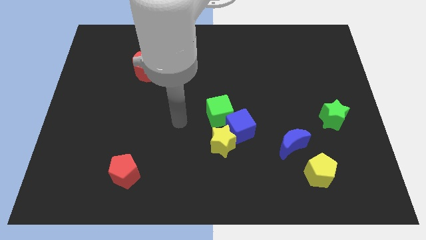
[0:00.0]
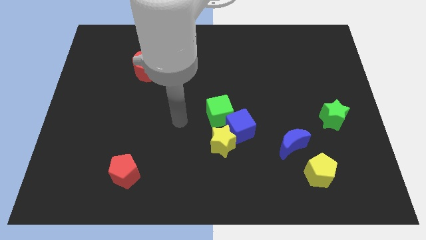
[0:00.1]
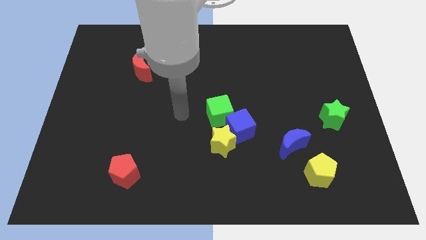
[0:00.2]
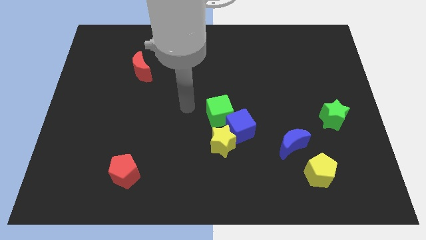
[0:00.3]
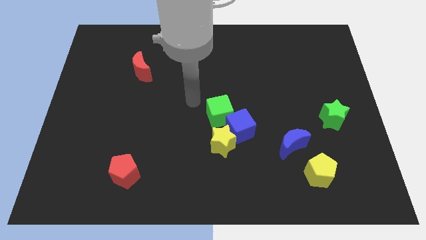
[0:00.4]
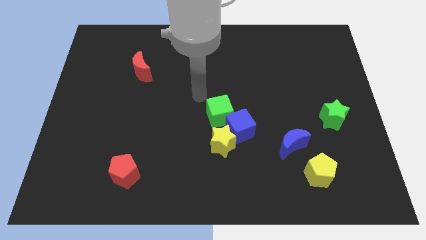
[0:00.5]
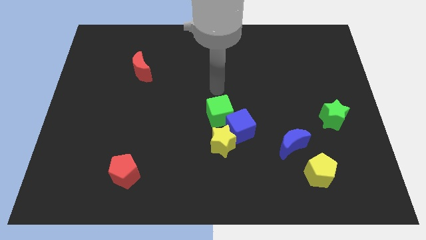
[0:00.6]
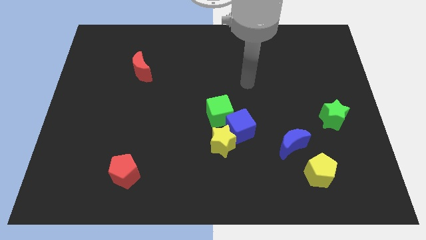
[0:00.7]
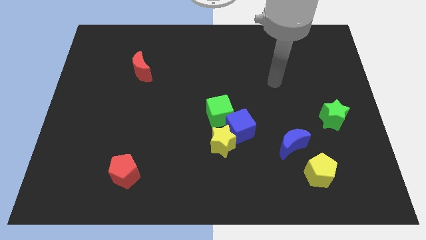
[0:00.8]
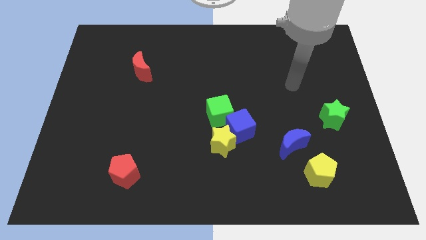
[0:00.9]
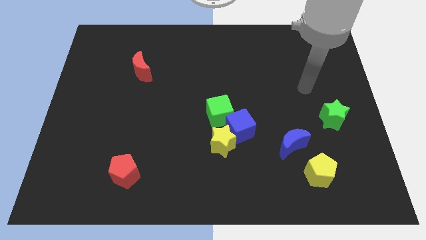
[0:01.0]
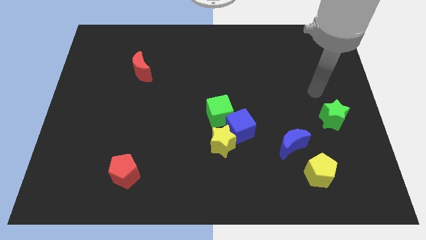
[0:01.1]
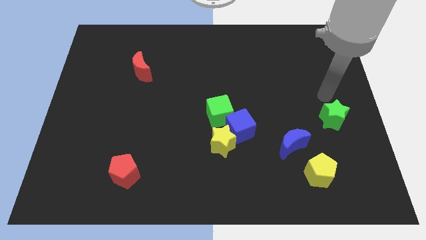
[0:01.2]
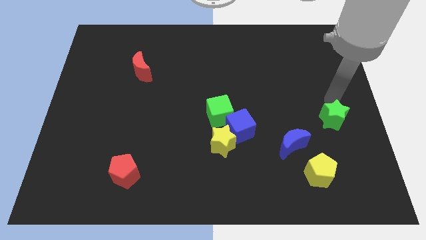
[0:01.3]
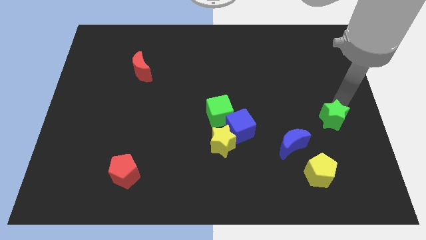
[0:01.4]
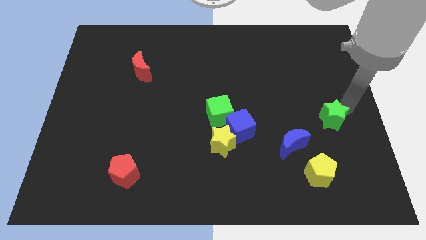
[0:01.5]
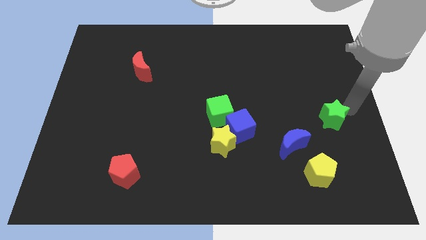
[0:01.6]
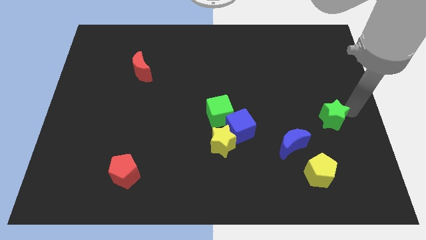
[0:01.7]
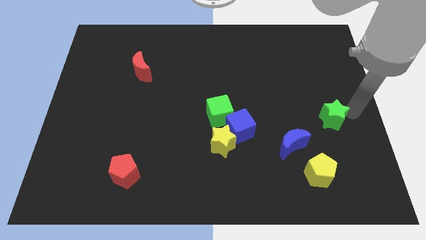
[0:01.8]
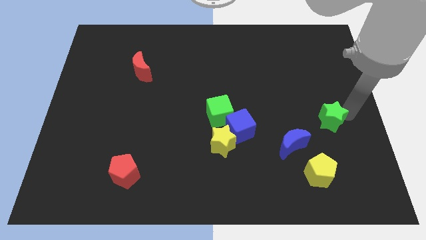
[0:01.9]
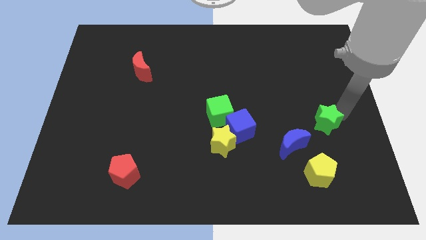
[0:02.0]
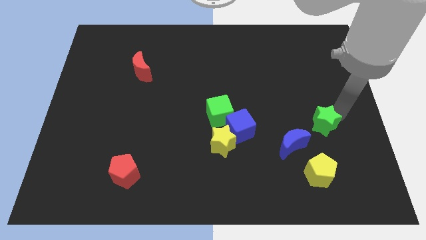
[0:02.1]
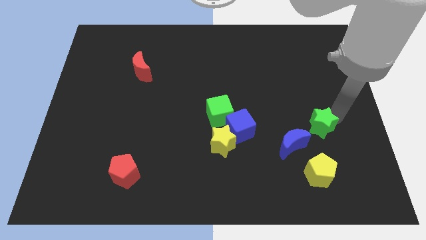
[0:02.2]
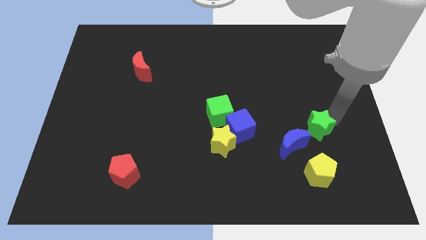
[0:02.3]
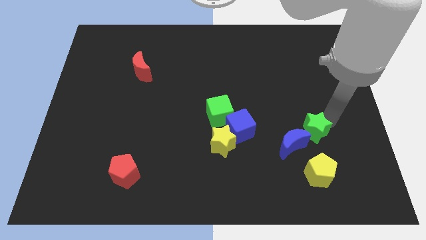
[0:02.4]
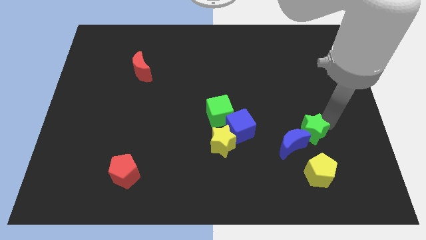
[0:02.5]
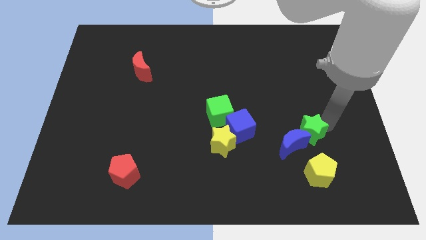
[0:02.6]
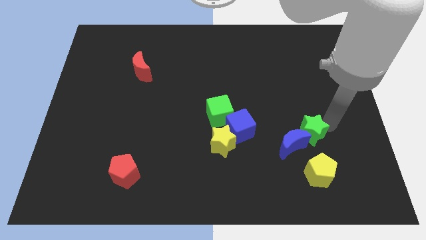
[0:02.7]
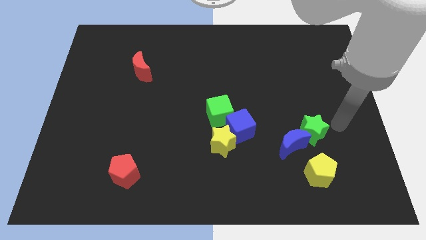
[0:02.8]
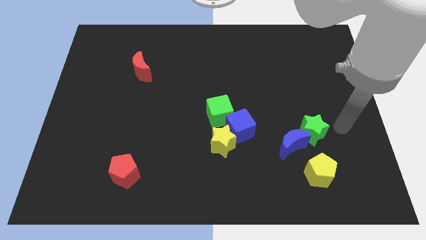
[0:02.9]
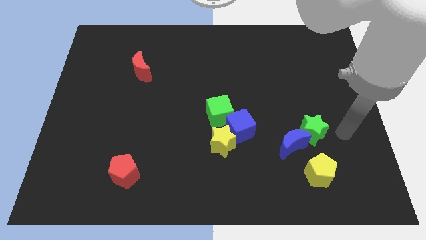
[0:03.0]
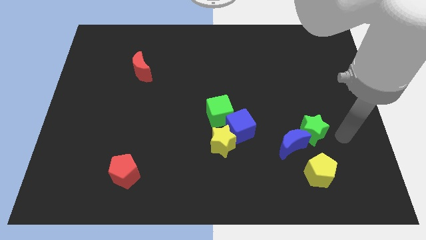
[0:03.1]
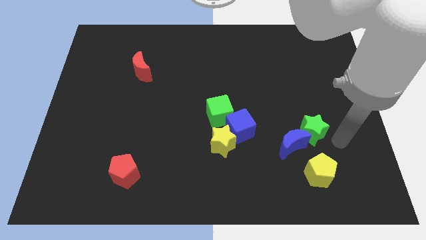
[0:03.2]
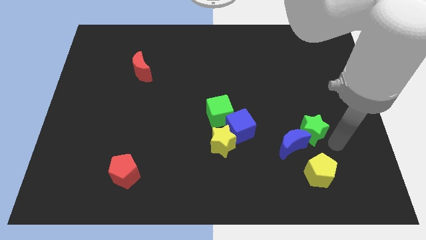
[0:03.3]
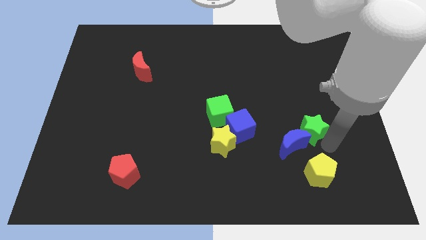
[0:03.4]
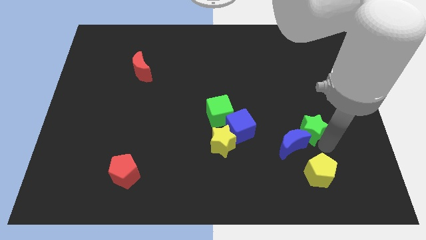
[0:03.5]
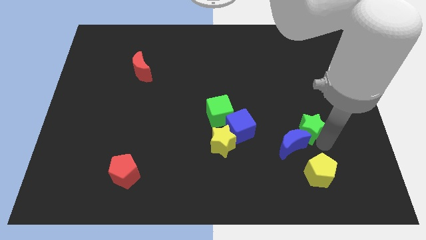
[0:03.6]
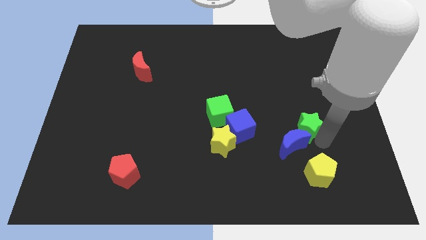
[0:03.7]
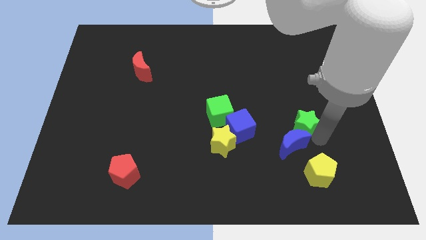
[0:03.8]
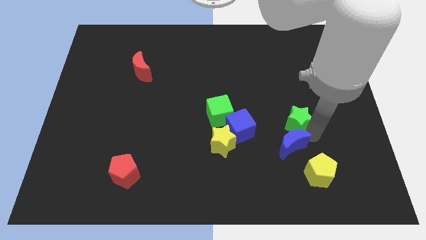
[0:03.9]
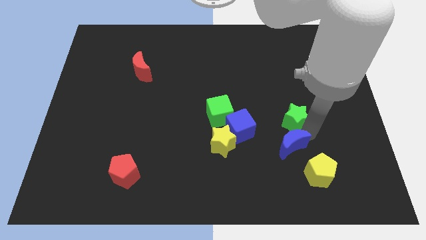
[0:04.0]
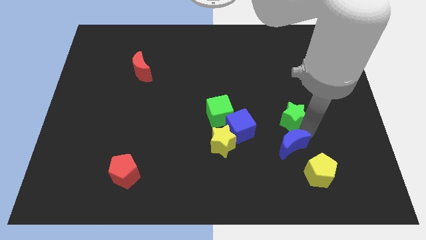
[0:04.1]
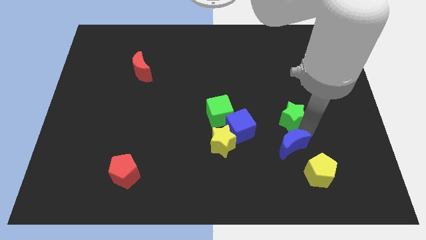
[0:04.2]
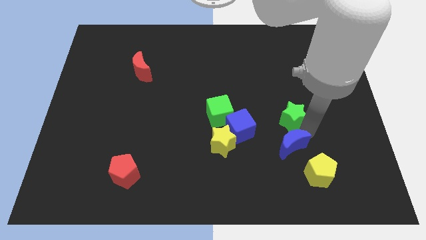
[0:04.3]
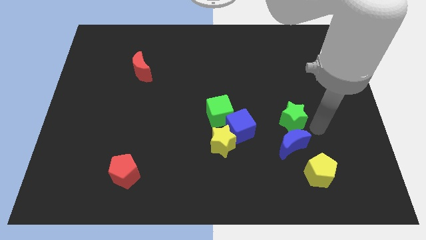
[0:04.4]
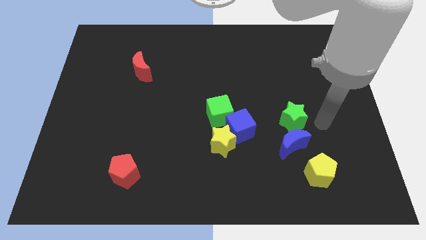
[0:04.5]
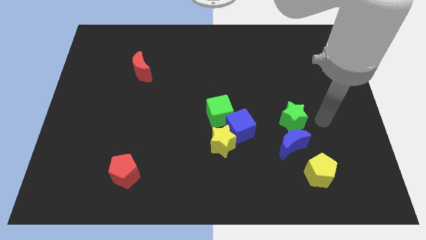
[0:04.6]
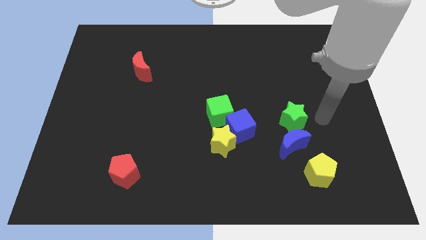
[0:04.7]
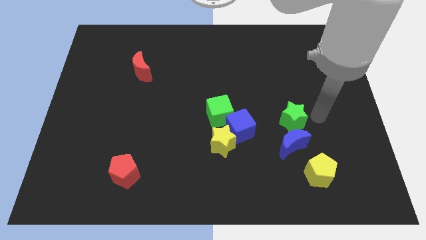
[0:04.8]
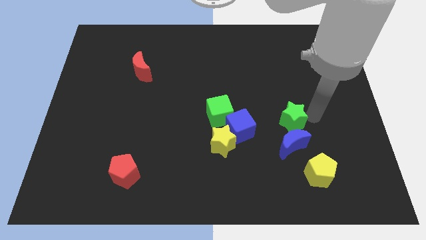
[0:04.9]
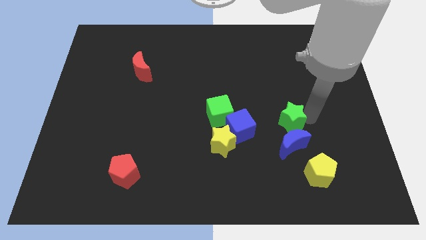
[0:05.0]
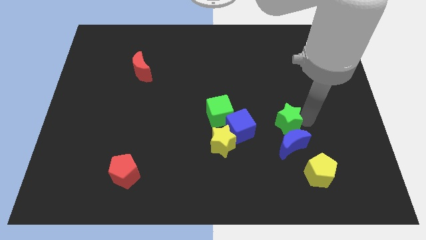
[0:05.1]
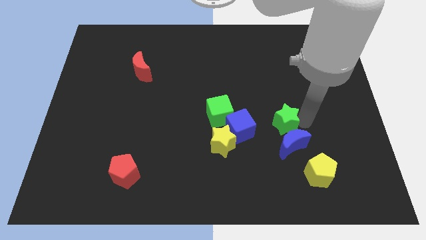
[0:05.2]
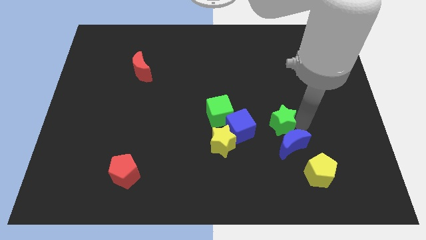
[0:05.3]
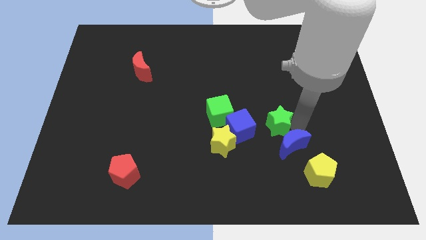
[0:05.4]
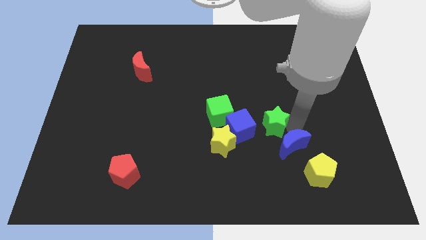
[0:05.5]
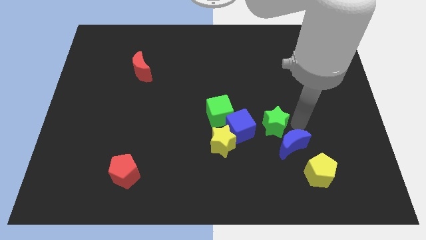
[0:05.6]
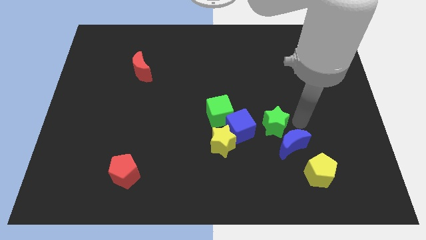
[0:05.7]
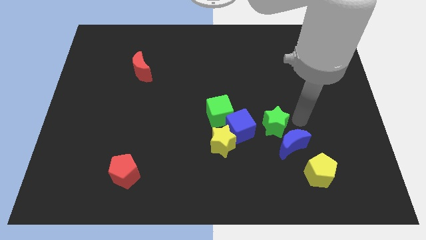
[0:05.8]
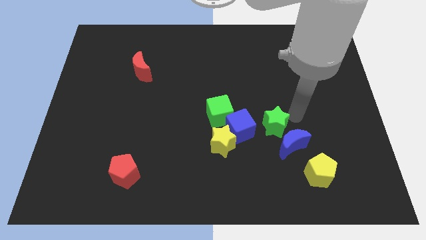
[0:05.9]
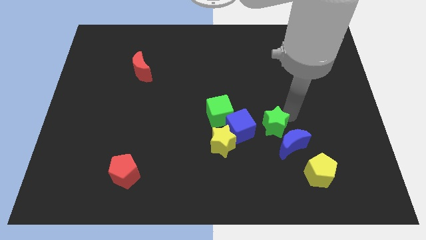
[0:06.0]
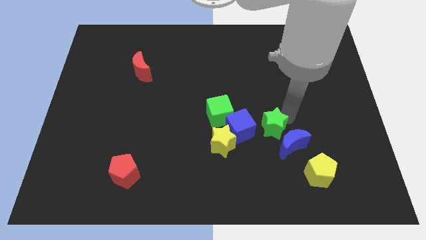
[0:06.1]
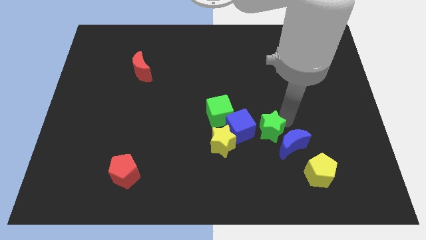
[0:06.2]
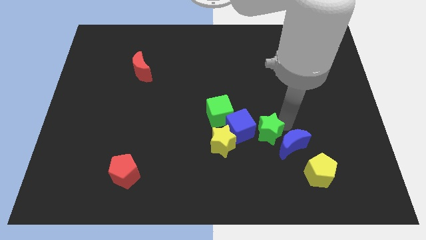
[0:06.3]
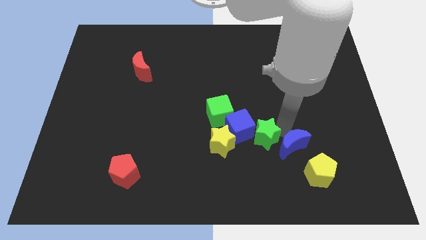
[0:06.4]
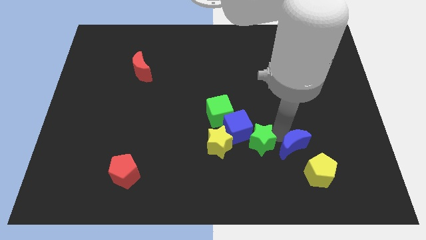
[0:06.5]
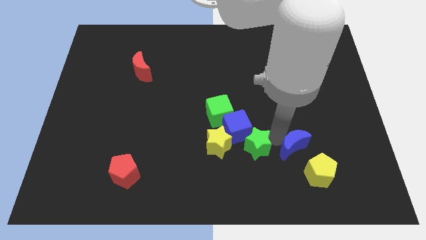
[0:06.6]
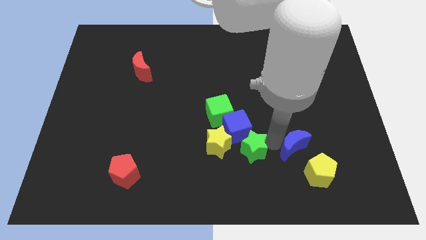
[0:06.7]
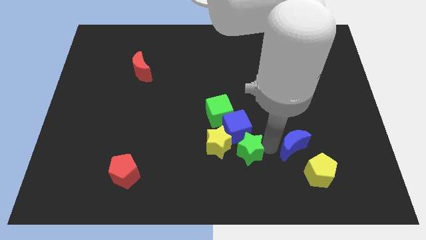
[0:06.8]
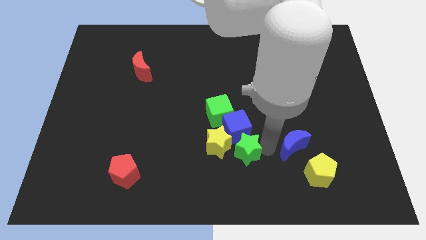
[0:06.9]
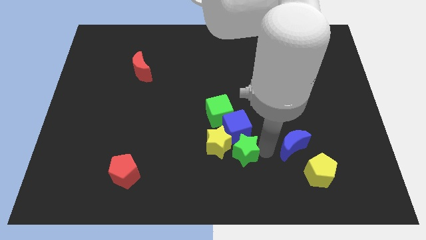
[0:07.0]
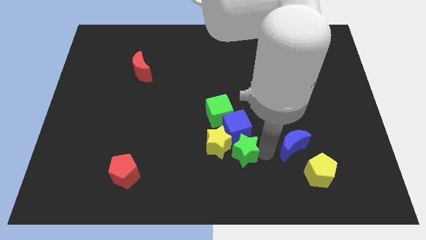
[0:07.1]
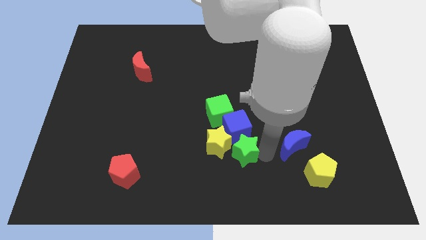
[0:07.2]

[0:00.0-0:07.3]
put the green star next to the yellow star

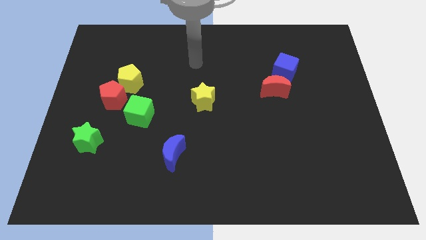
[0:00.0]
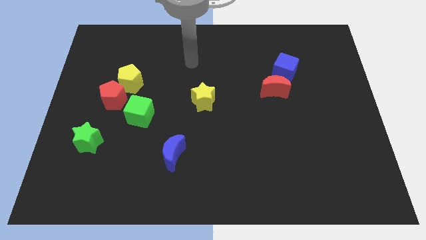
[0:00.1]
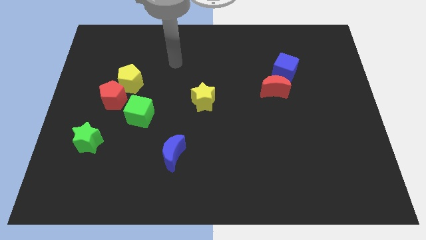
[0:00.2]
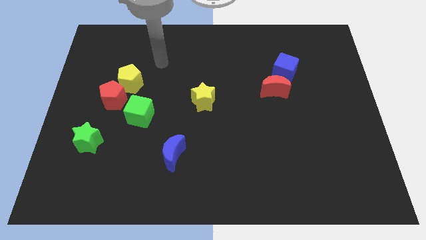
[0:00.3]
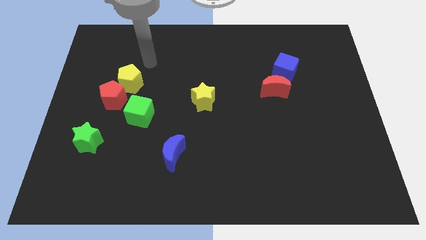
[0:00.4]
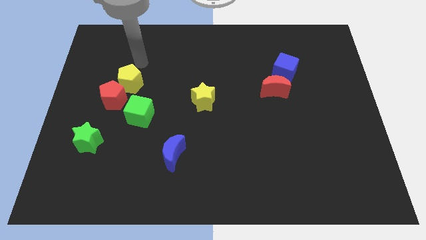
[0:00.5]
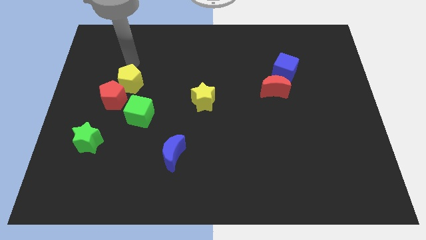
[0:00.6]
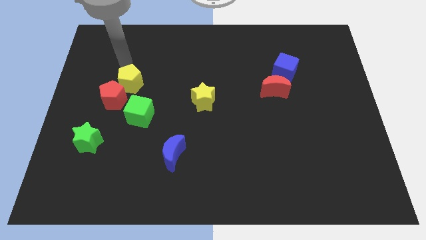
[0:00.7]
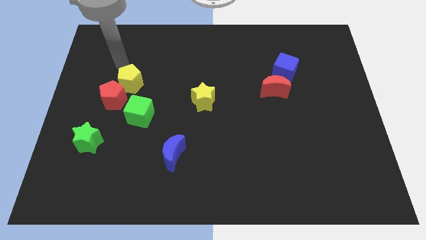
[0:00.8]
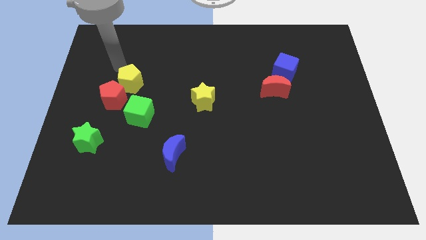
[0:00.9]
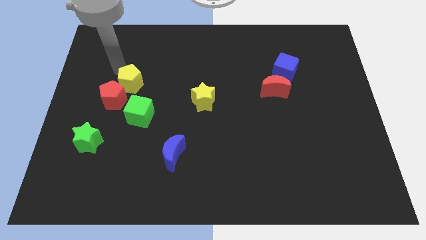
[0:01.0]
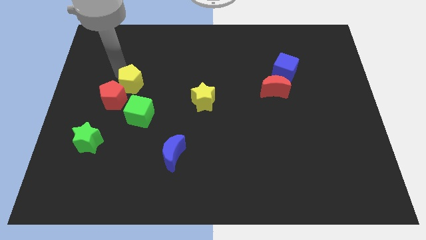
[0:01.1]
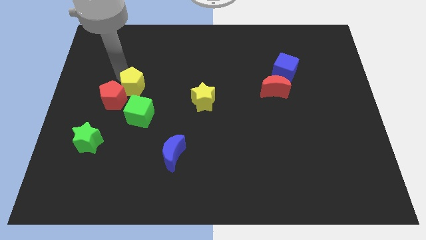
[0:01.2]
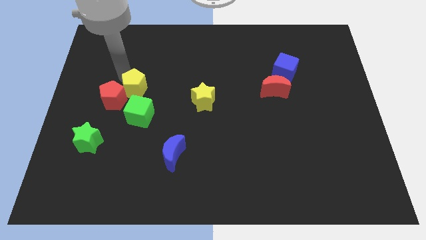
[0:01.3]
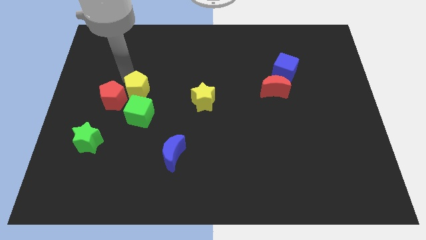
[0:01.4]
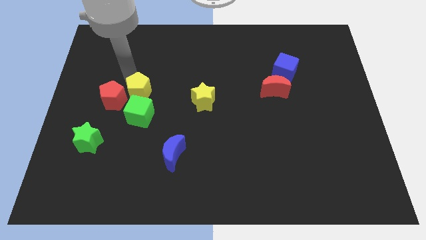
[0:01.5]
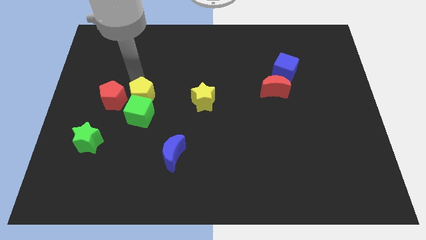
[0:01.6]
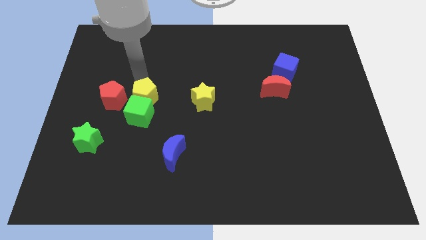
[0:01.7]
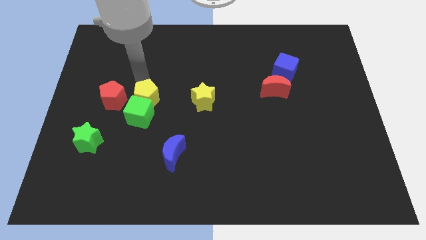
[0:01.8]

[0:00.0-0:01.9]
move the yellow pentagon close to the green cube
